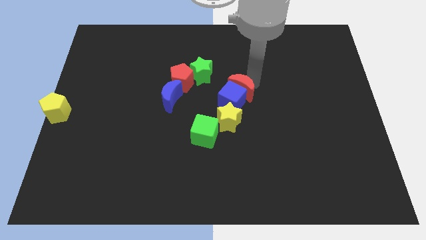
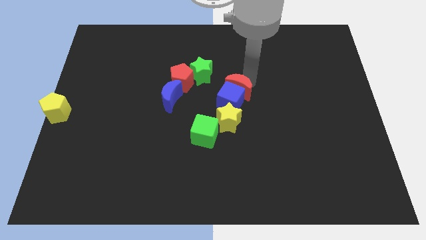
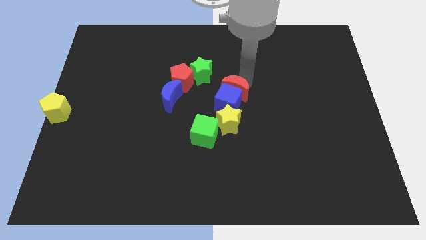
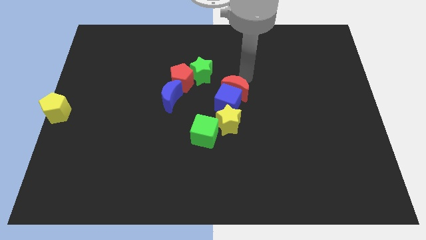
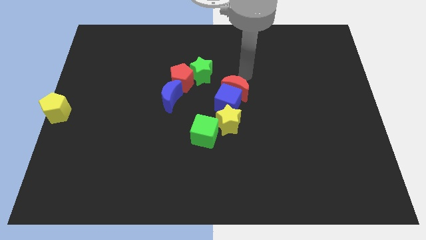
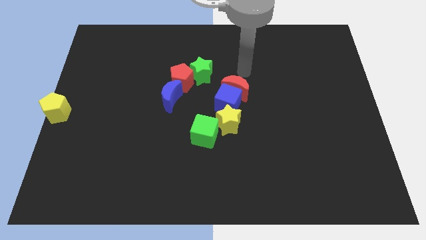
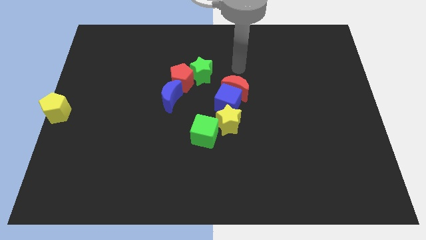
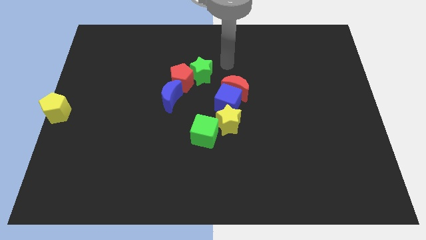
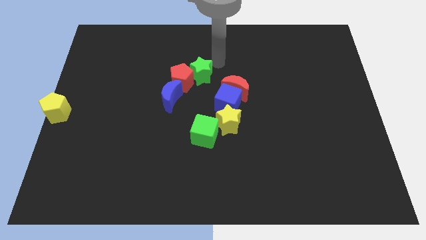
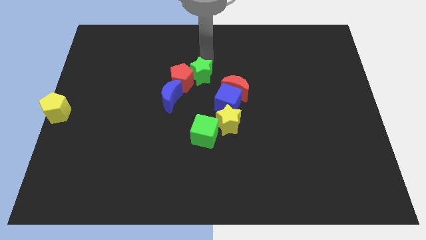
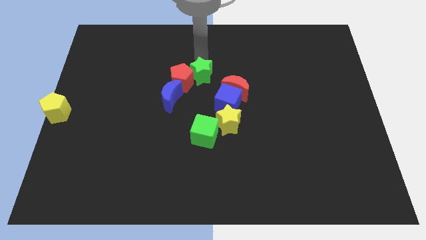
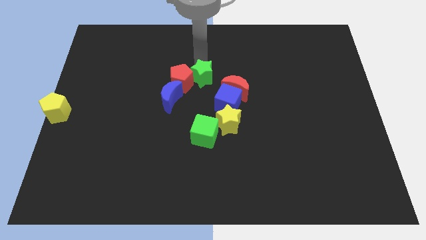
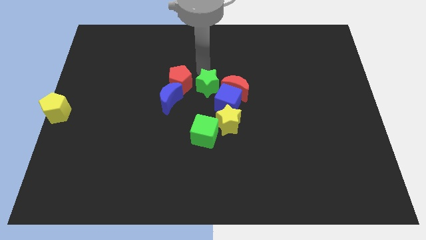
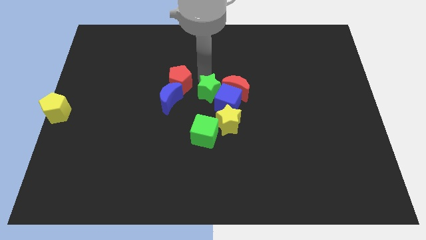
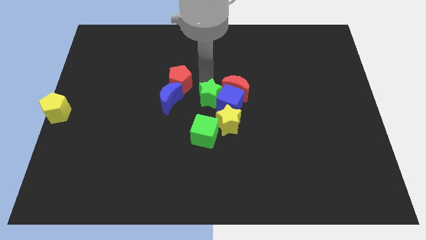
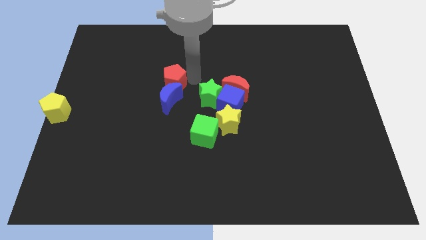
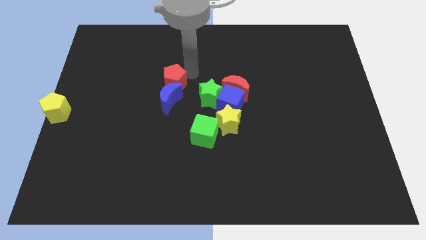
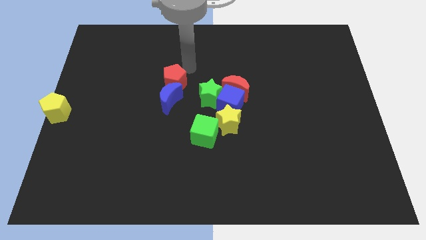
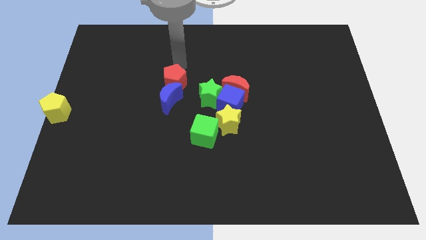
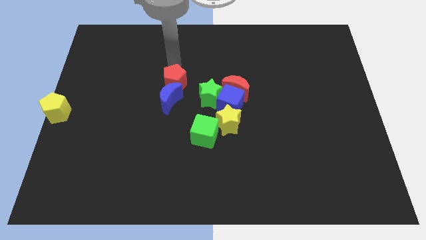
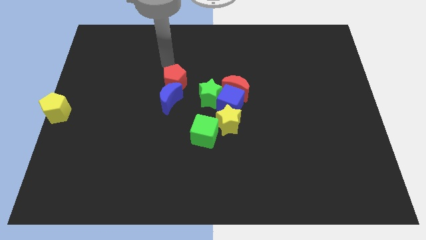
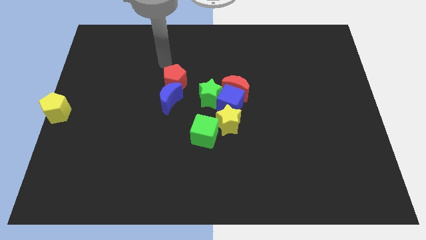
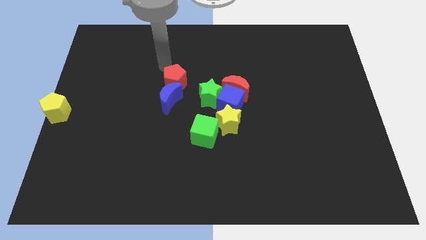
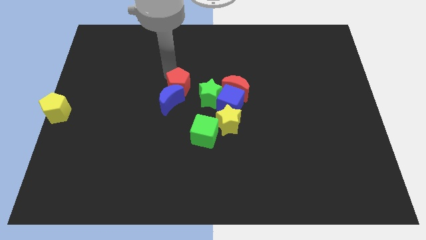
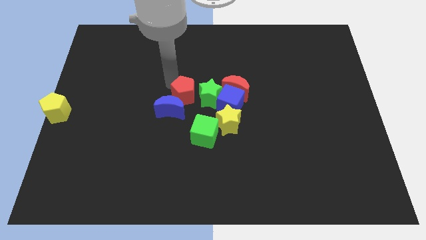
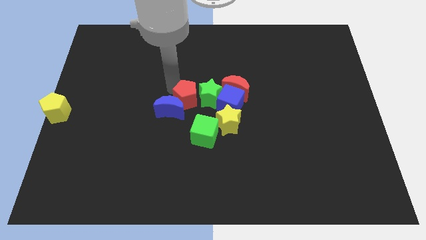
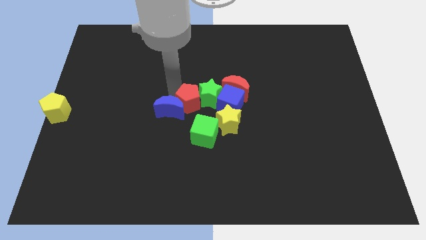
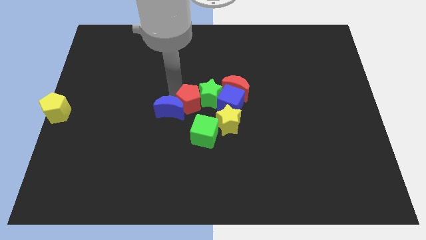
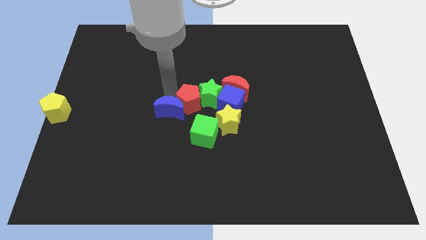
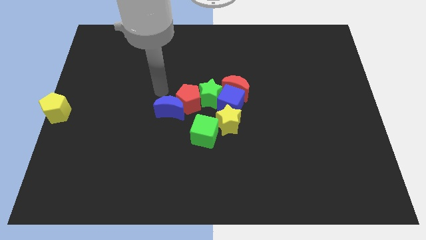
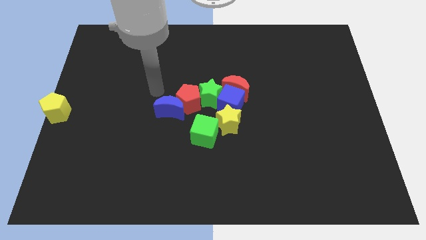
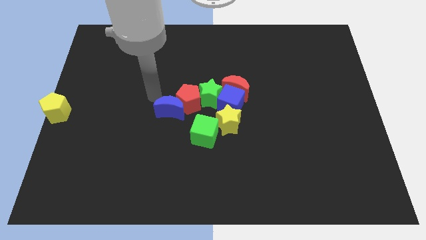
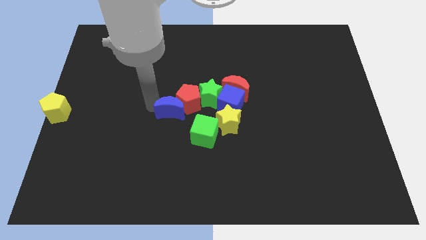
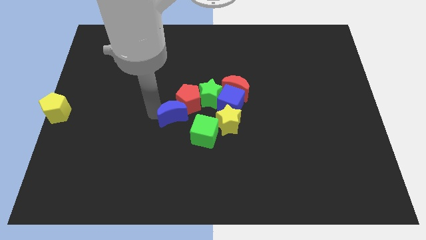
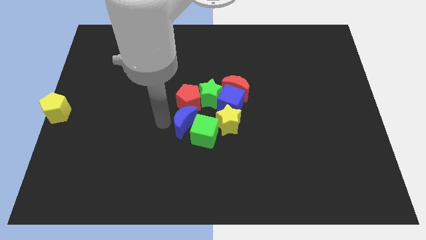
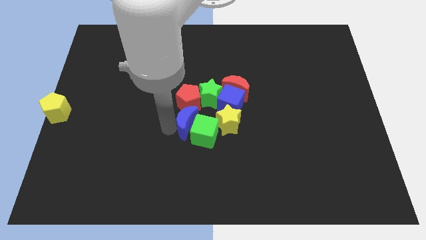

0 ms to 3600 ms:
place the blue moon to left of green cube

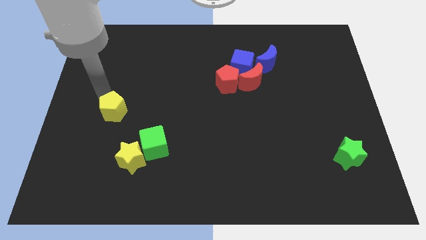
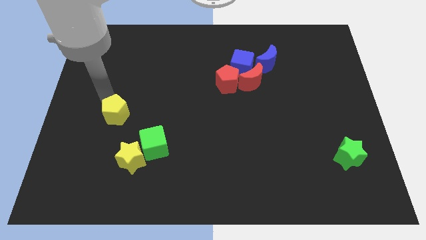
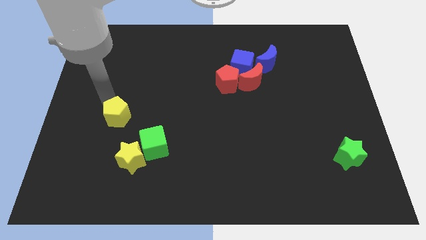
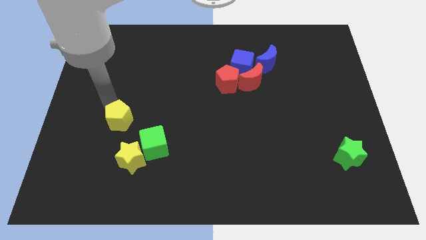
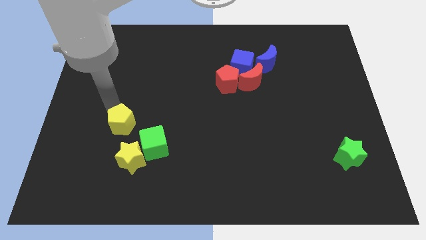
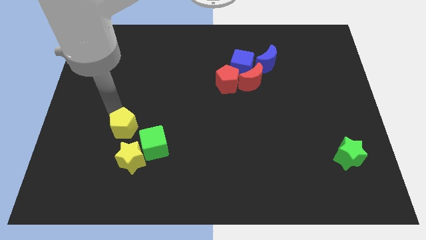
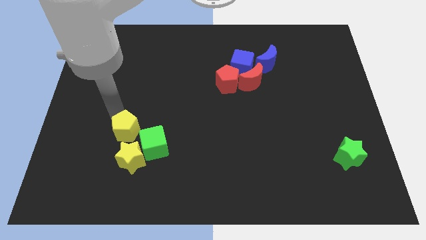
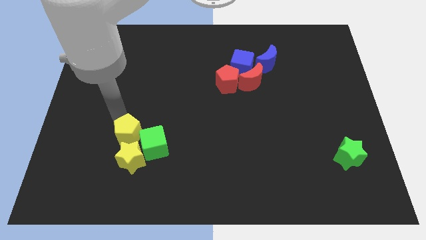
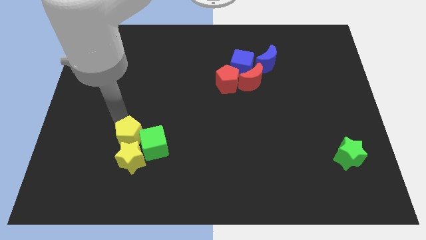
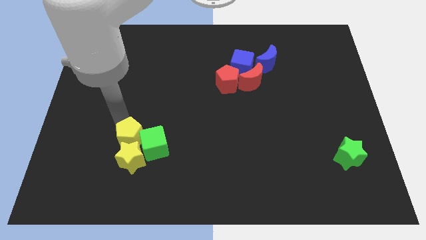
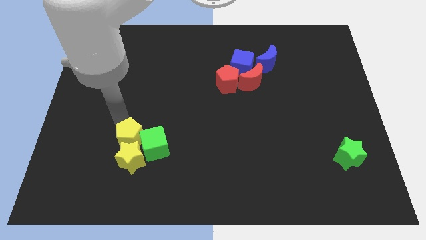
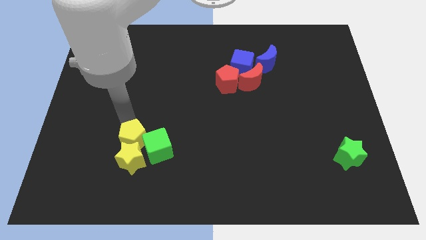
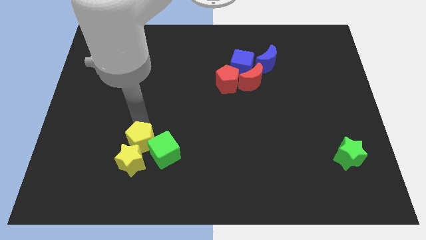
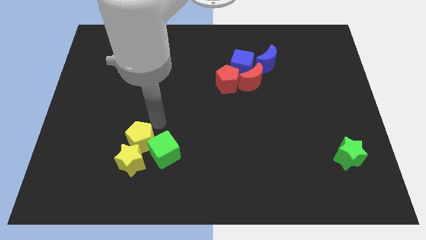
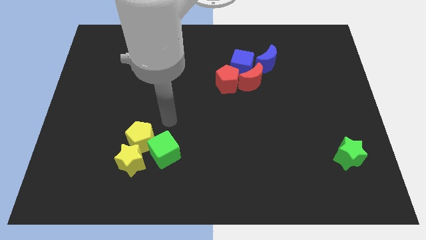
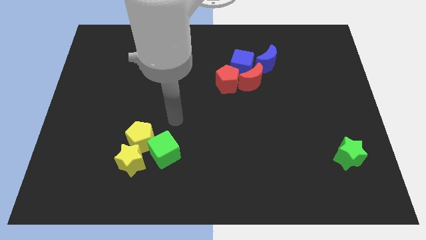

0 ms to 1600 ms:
move yellow pentagon into yellow star and green cube

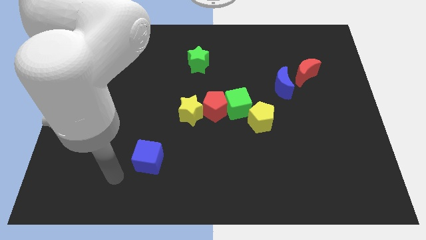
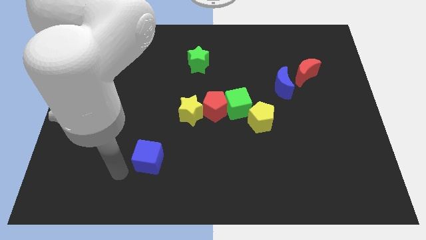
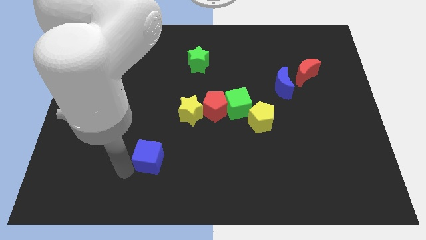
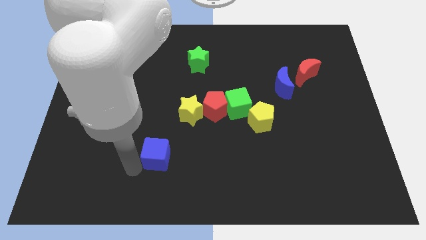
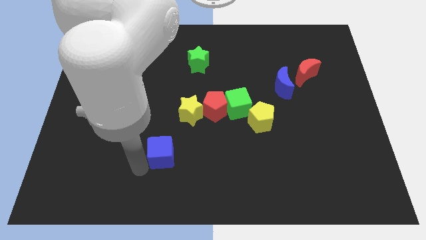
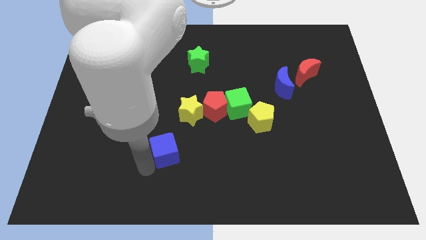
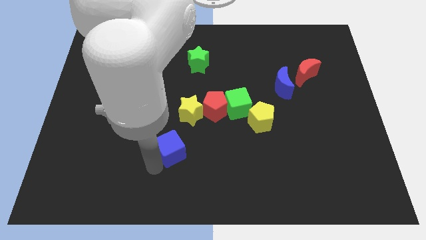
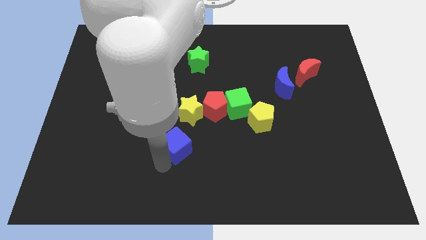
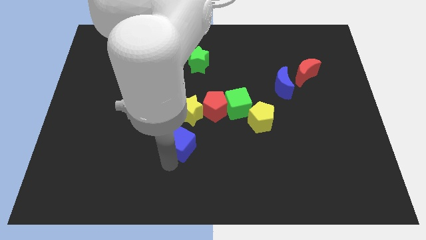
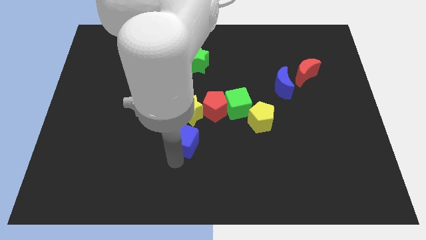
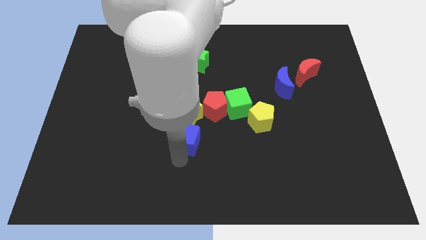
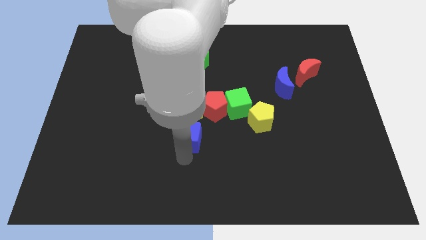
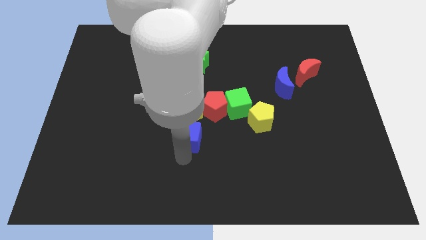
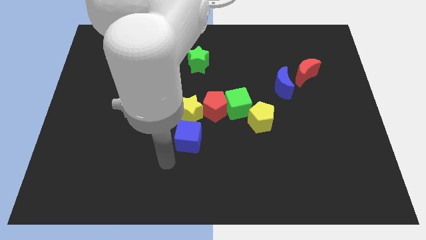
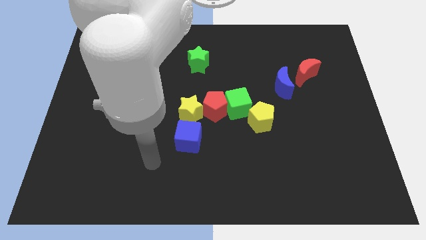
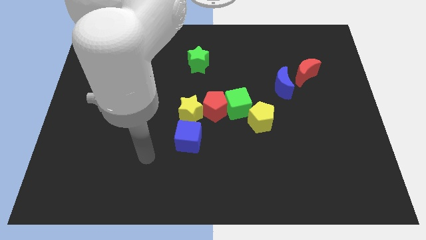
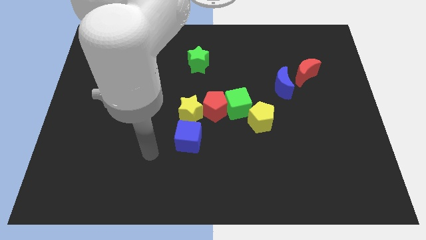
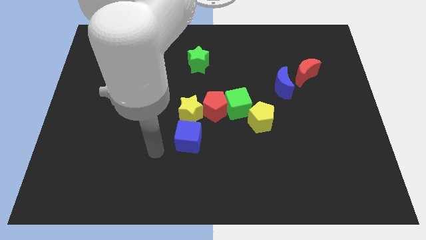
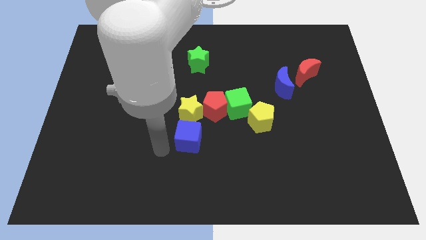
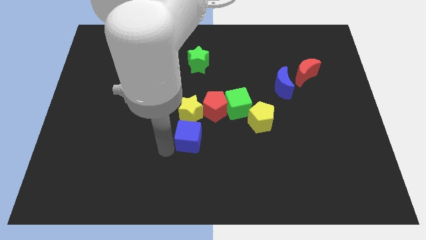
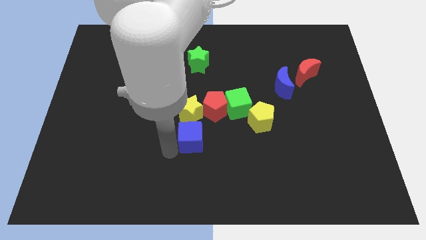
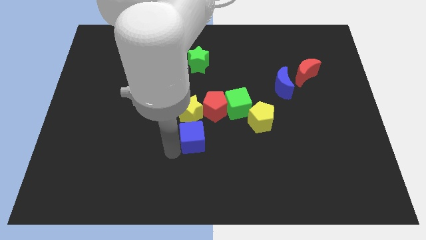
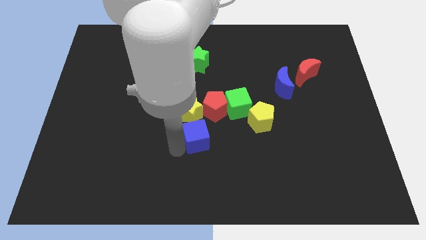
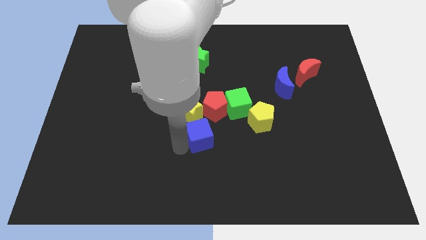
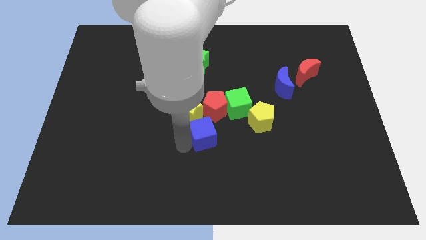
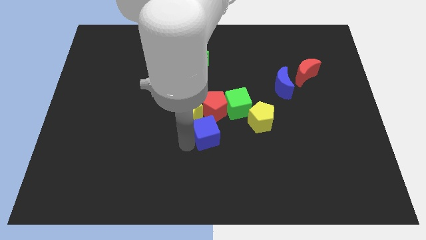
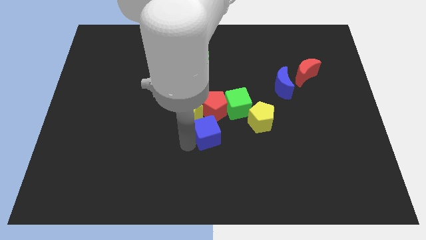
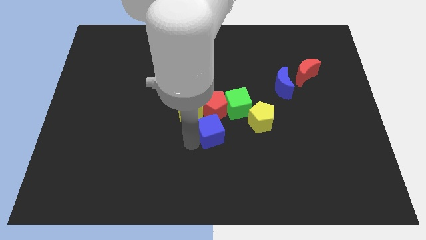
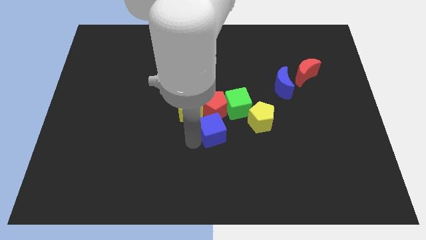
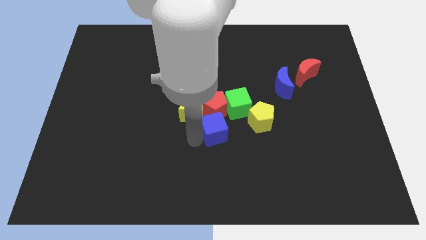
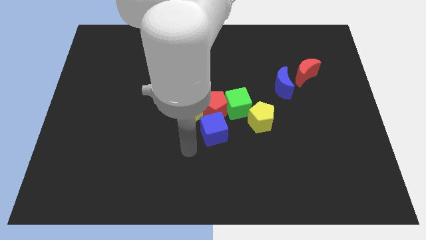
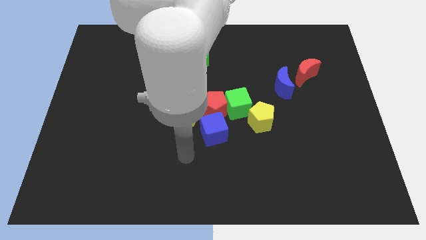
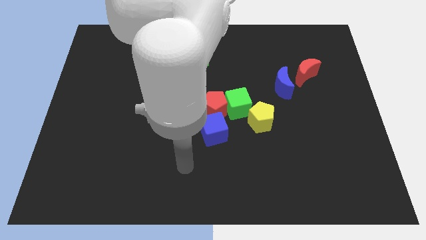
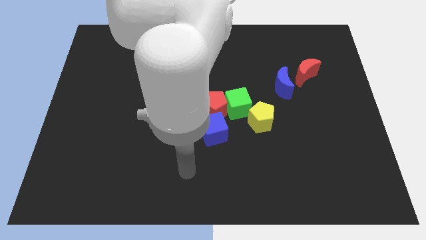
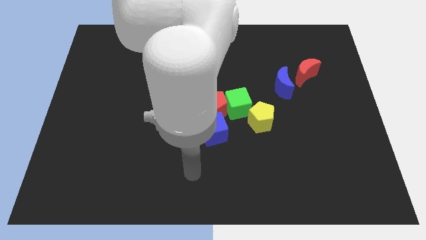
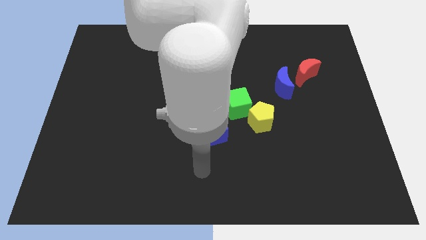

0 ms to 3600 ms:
move the blue cube to the bottom of the red pentagon
